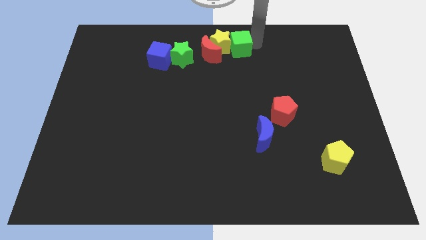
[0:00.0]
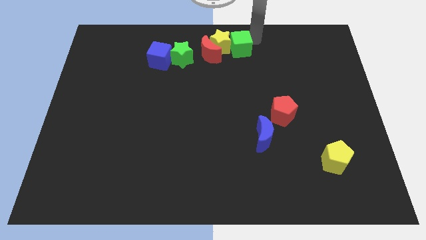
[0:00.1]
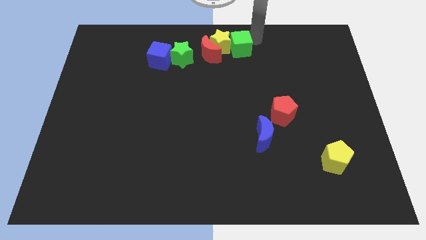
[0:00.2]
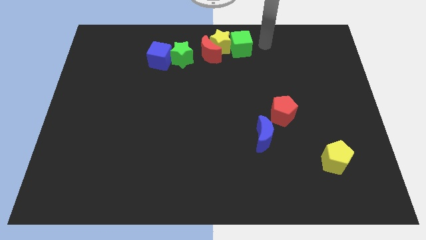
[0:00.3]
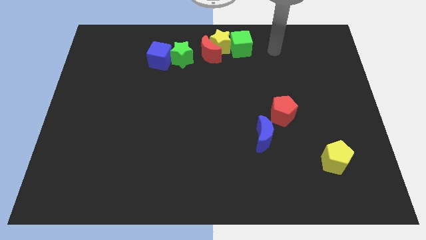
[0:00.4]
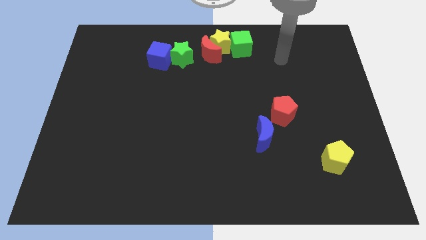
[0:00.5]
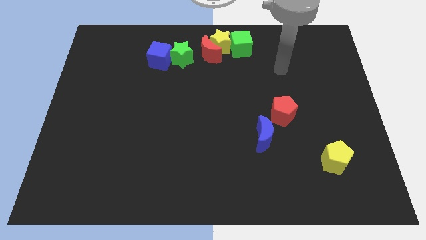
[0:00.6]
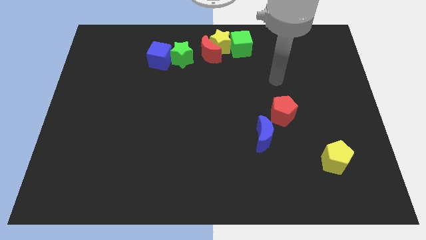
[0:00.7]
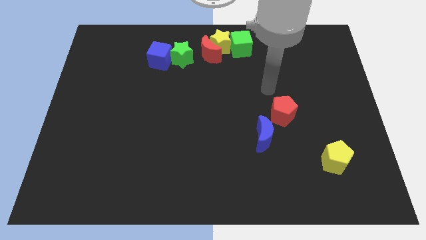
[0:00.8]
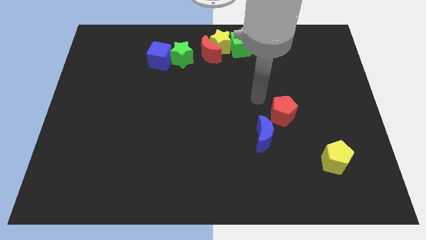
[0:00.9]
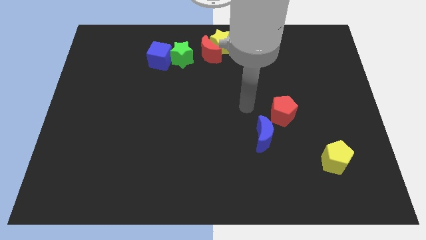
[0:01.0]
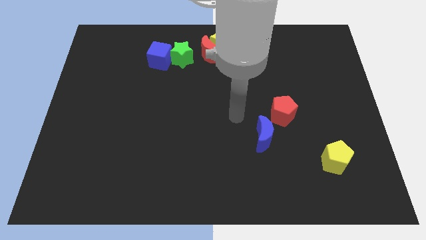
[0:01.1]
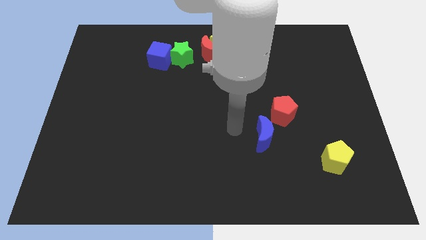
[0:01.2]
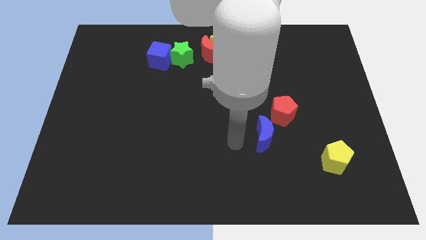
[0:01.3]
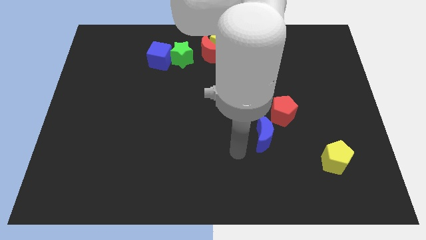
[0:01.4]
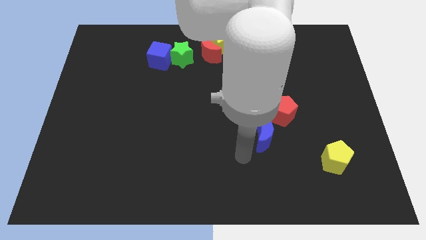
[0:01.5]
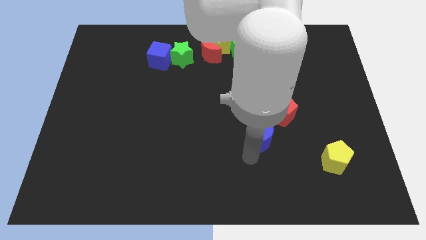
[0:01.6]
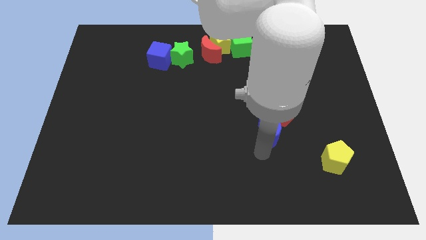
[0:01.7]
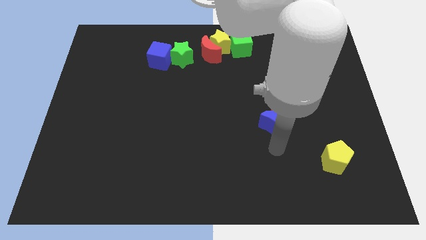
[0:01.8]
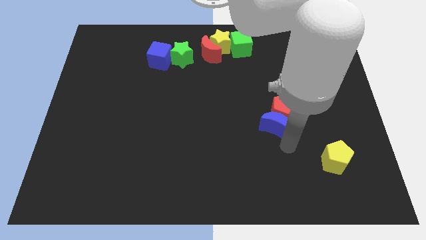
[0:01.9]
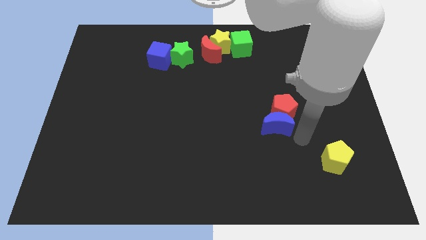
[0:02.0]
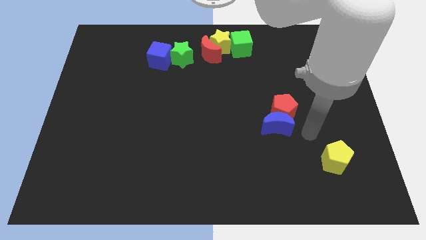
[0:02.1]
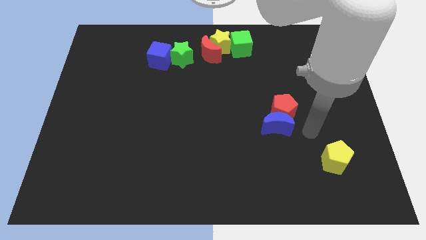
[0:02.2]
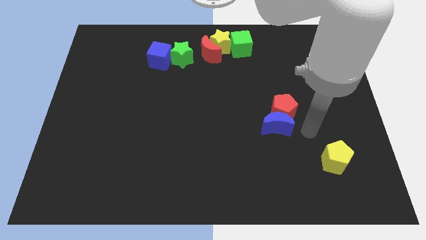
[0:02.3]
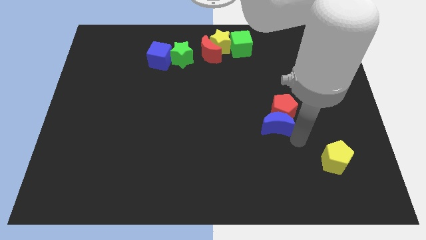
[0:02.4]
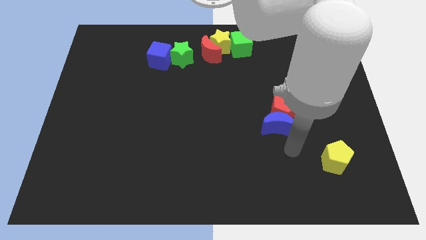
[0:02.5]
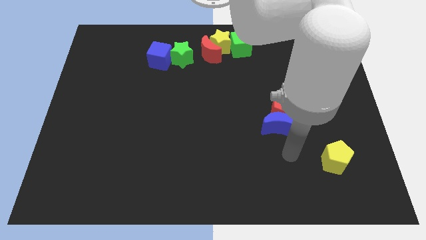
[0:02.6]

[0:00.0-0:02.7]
slightly turn the blue moon into red pentagon

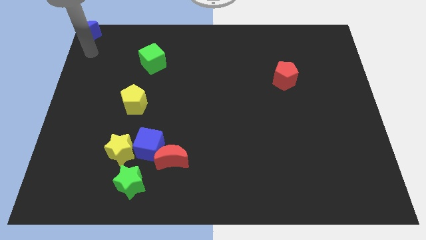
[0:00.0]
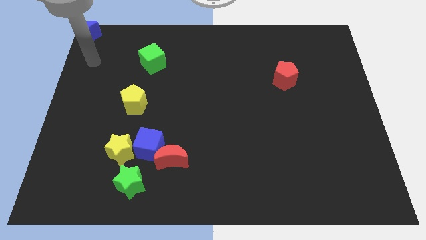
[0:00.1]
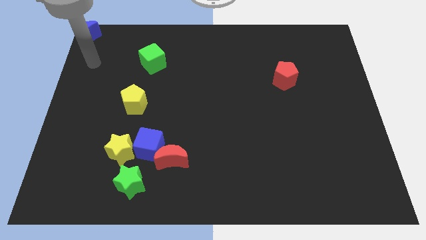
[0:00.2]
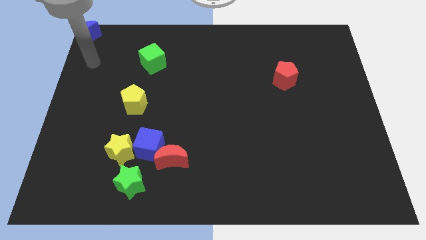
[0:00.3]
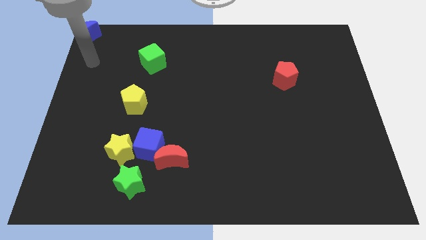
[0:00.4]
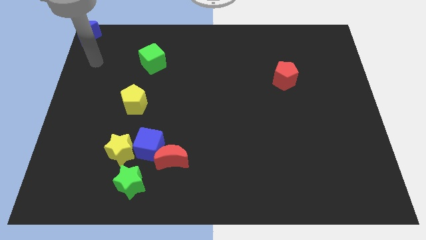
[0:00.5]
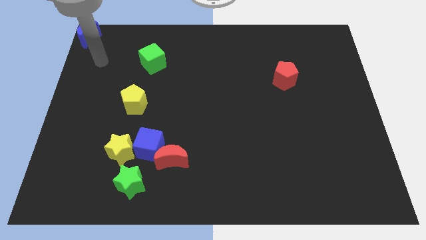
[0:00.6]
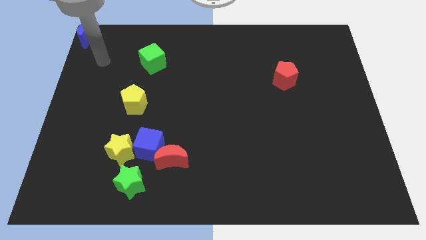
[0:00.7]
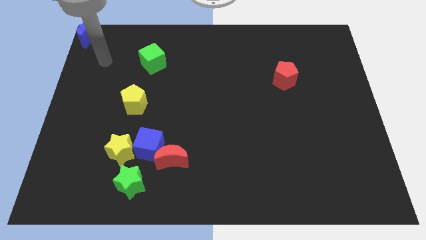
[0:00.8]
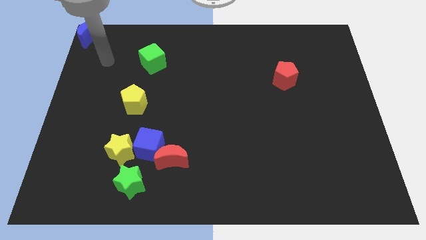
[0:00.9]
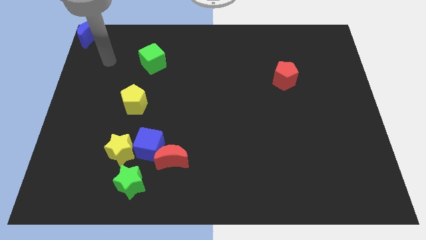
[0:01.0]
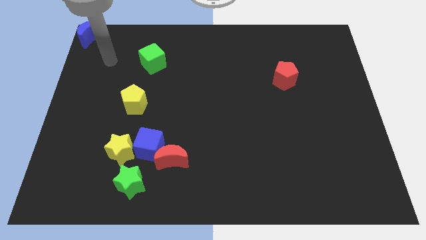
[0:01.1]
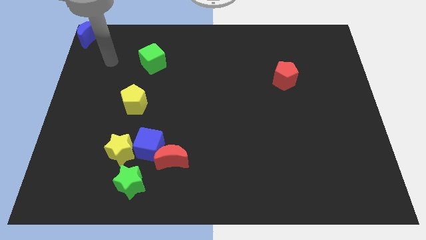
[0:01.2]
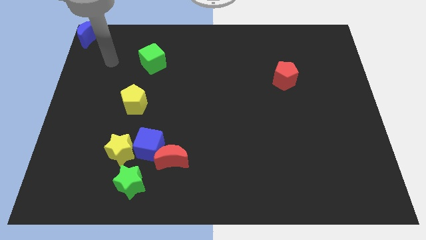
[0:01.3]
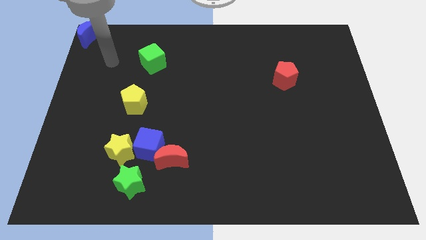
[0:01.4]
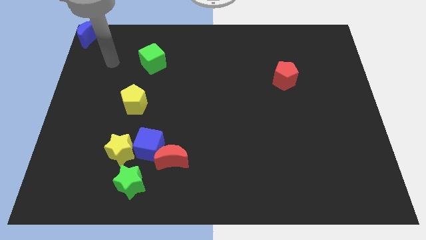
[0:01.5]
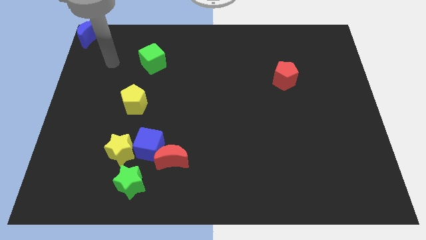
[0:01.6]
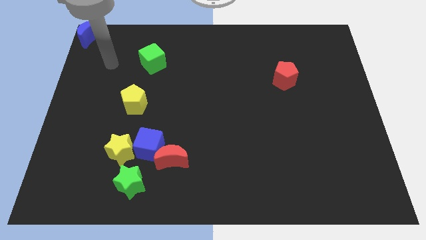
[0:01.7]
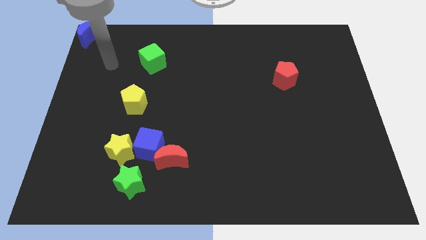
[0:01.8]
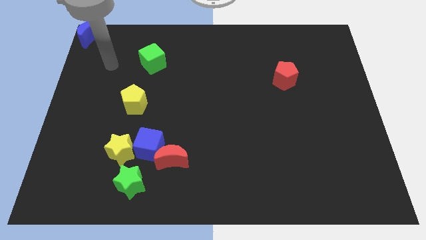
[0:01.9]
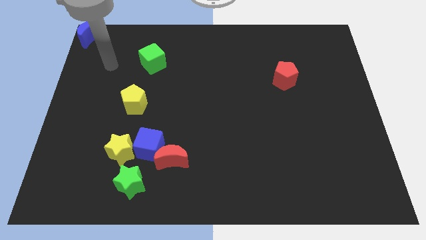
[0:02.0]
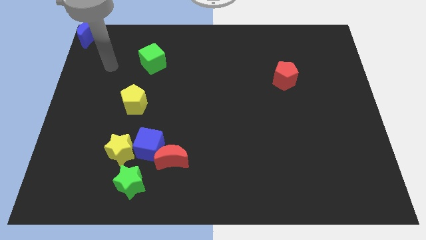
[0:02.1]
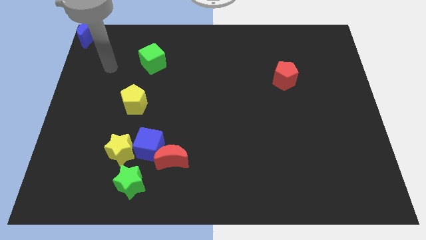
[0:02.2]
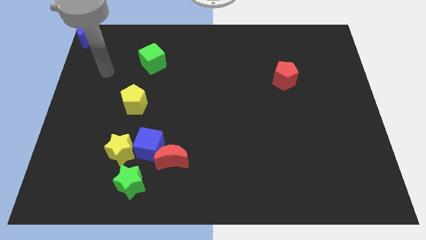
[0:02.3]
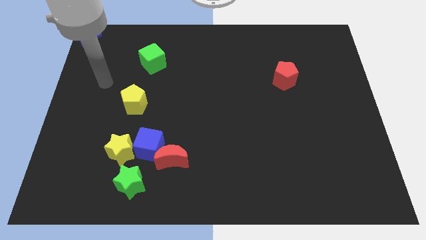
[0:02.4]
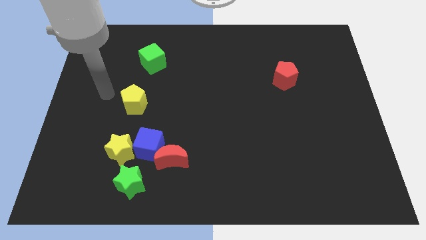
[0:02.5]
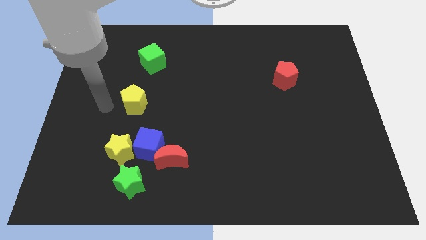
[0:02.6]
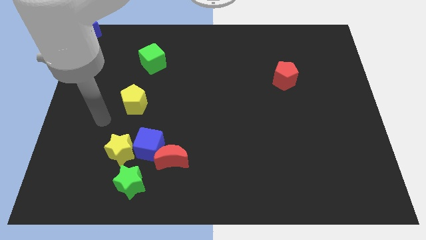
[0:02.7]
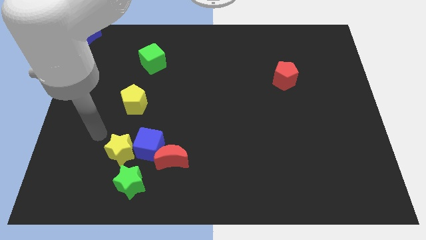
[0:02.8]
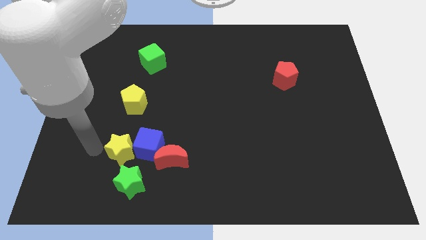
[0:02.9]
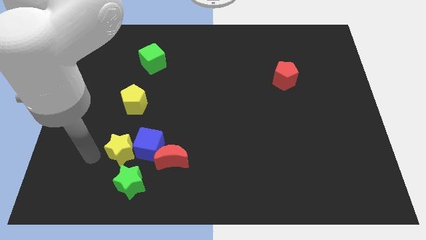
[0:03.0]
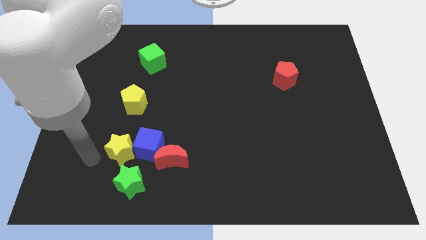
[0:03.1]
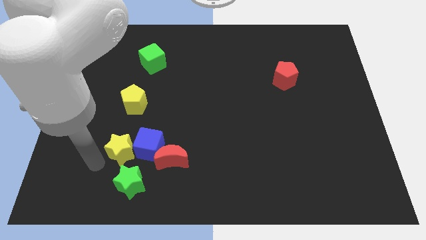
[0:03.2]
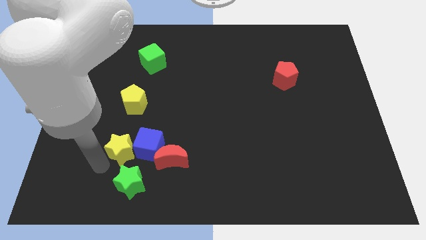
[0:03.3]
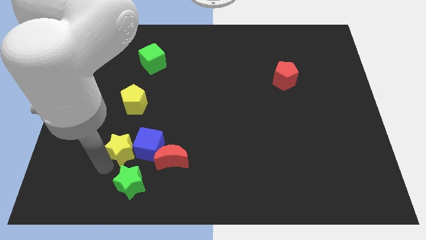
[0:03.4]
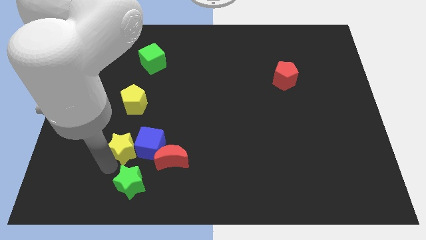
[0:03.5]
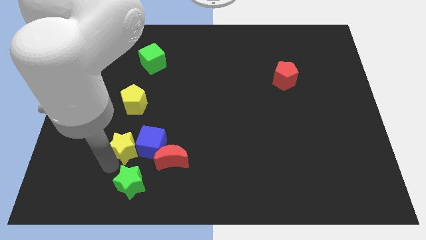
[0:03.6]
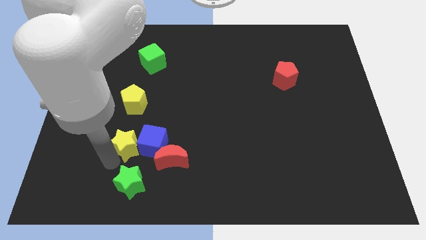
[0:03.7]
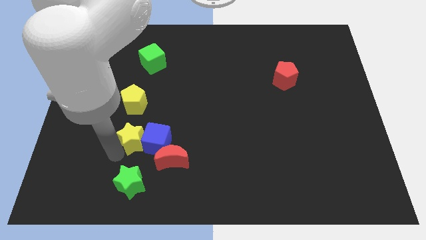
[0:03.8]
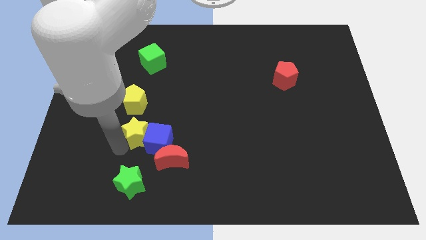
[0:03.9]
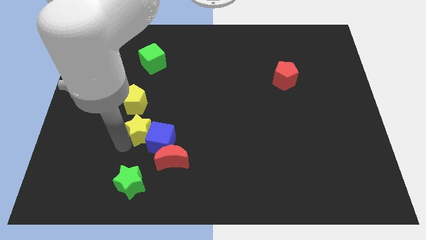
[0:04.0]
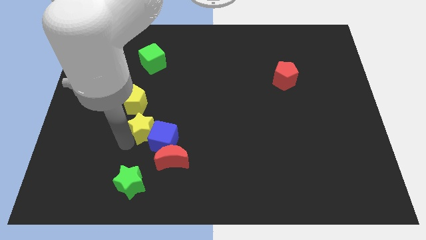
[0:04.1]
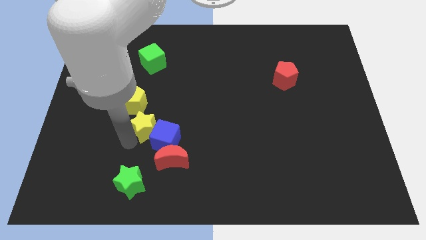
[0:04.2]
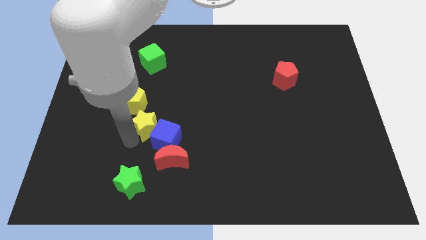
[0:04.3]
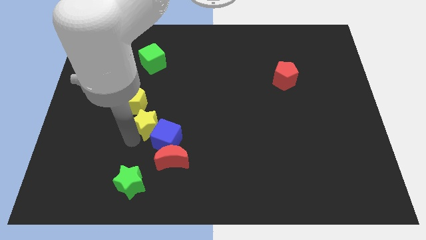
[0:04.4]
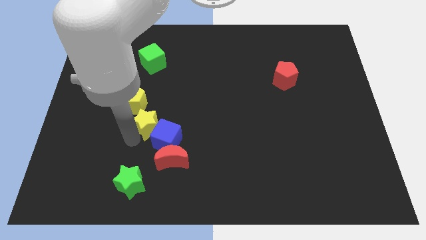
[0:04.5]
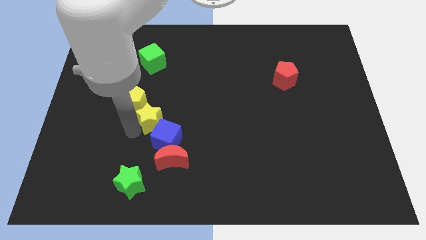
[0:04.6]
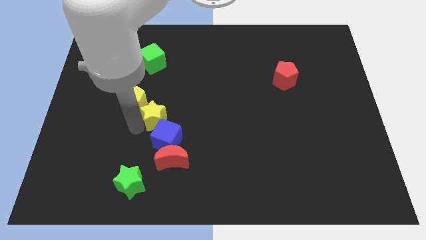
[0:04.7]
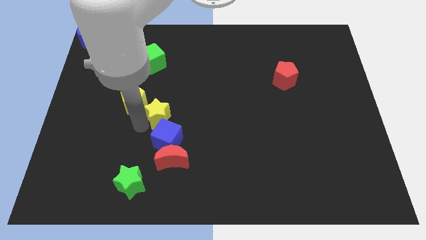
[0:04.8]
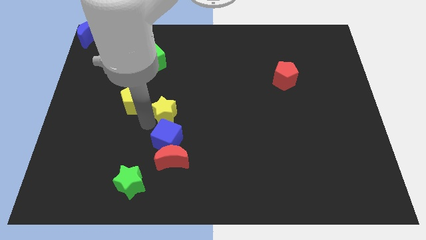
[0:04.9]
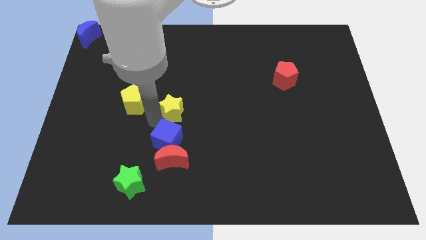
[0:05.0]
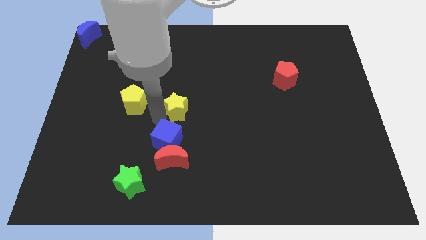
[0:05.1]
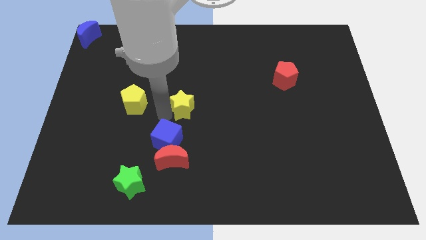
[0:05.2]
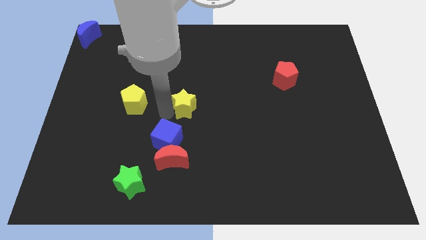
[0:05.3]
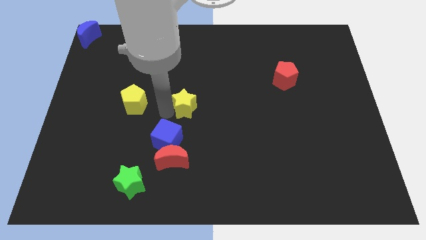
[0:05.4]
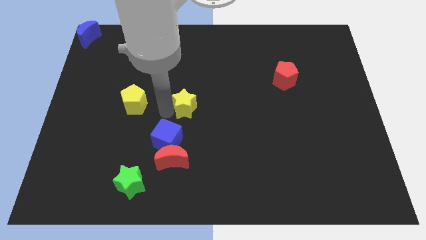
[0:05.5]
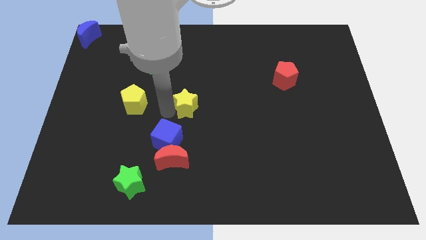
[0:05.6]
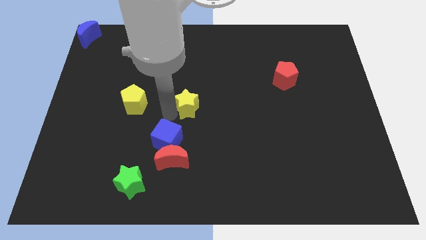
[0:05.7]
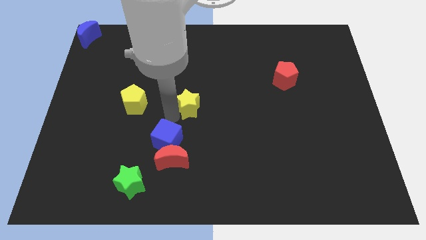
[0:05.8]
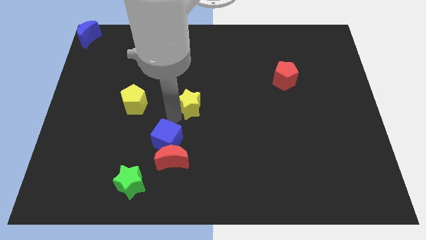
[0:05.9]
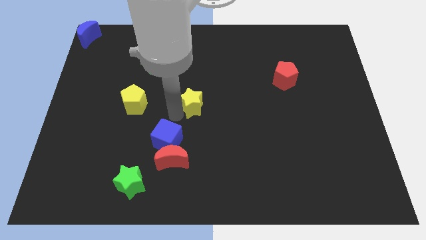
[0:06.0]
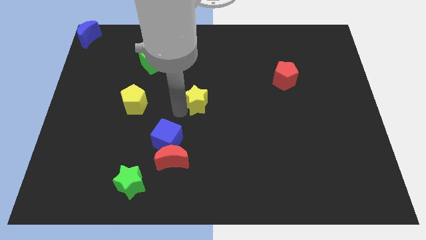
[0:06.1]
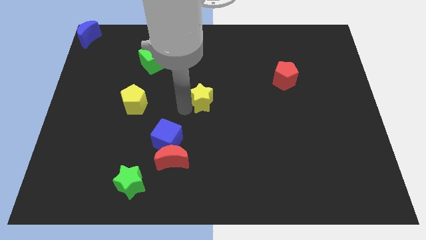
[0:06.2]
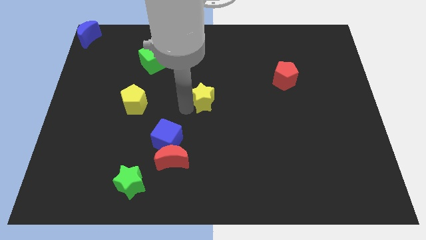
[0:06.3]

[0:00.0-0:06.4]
move yellow star to the center of the board
